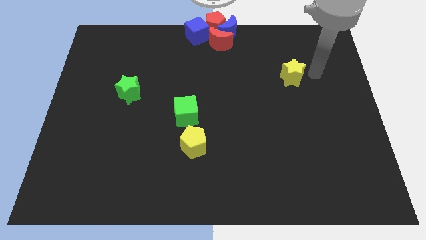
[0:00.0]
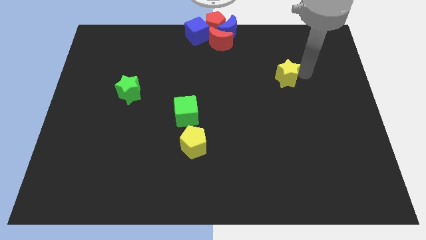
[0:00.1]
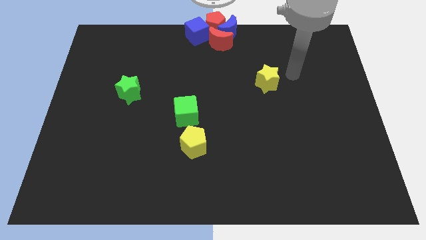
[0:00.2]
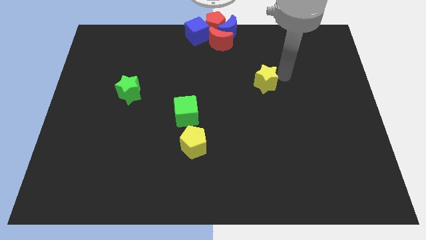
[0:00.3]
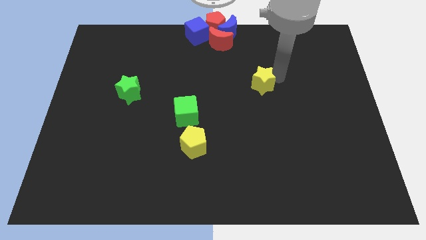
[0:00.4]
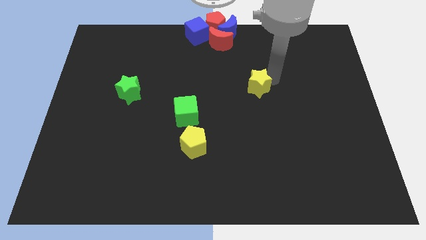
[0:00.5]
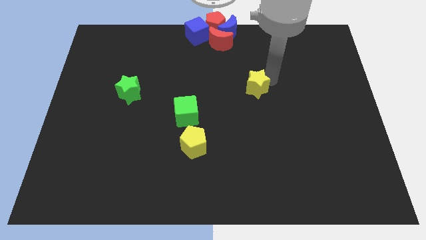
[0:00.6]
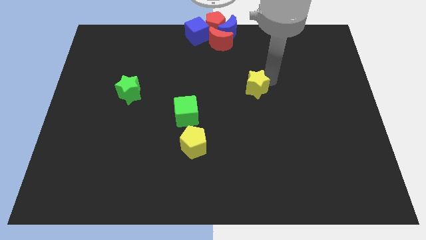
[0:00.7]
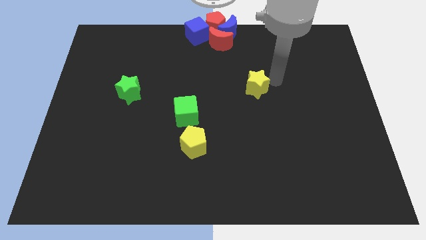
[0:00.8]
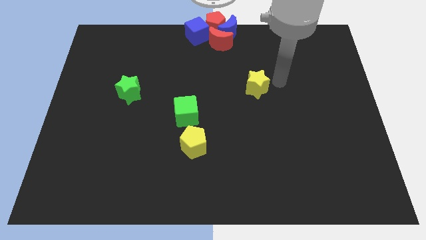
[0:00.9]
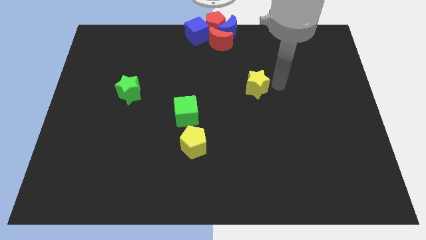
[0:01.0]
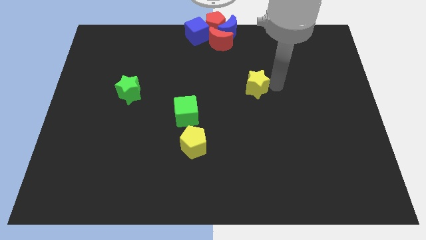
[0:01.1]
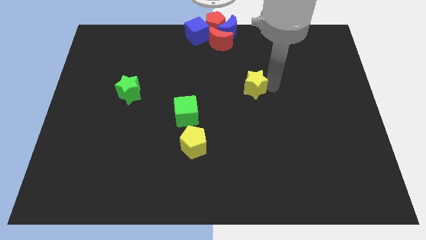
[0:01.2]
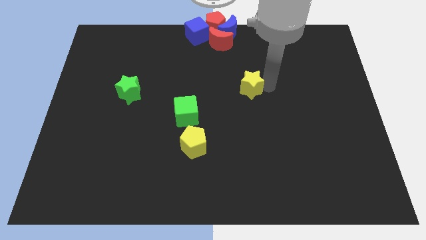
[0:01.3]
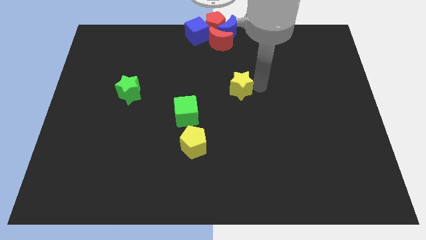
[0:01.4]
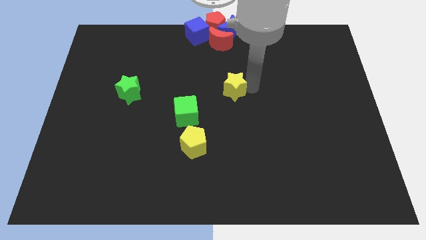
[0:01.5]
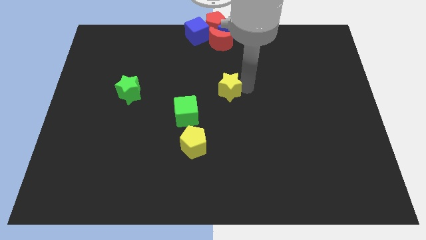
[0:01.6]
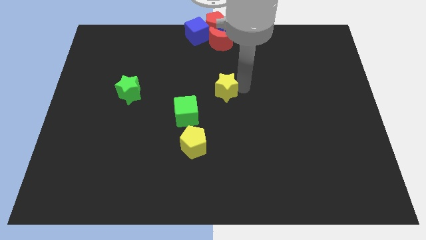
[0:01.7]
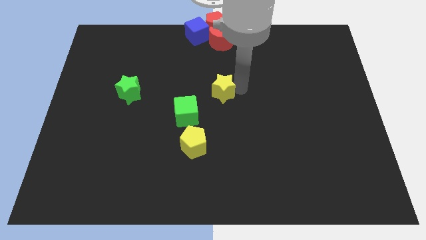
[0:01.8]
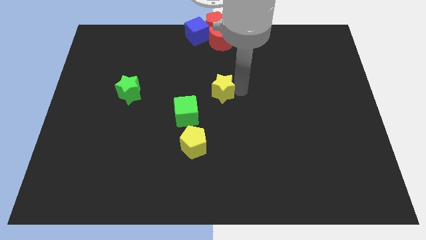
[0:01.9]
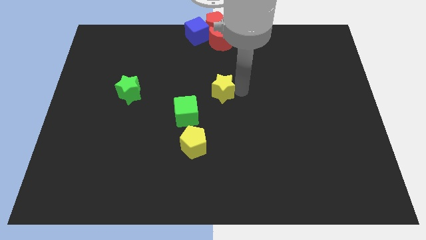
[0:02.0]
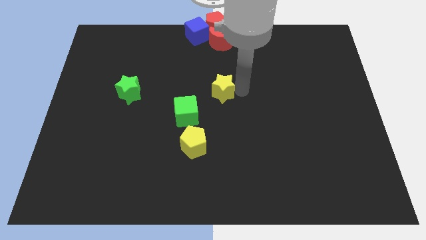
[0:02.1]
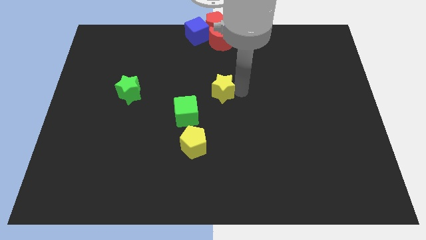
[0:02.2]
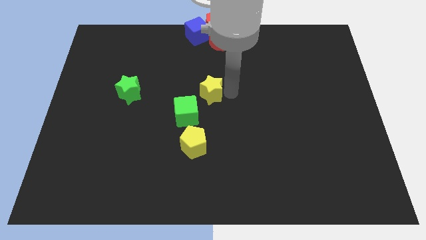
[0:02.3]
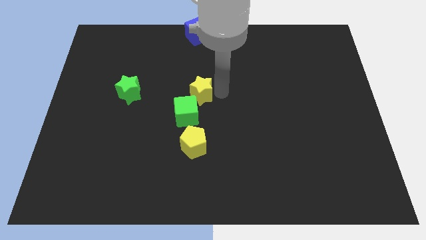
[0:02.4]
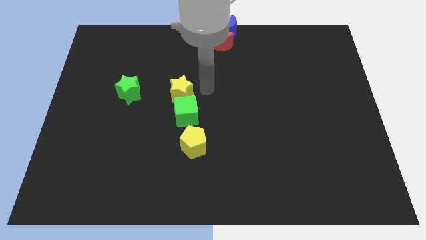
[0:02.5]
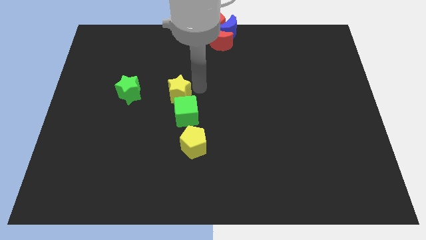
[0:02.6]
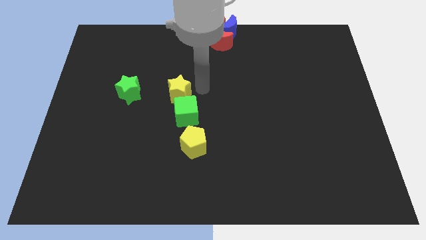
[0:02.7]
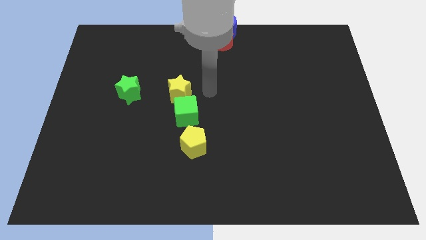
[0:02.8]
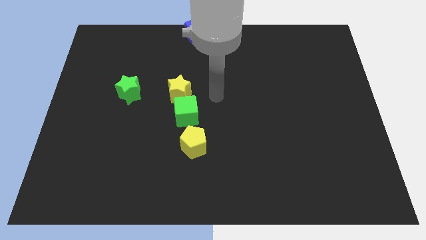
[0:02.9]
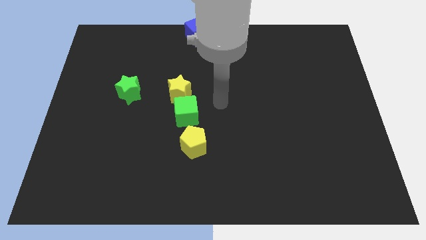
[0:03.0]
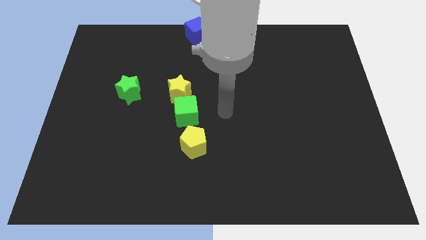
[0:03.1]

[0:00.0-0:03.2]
push the yellow star above the green cube

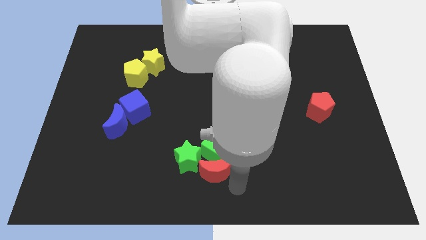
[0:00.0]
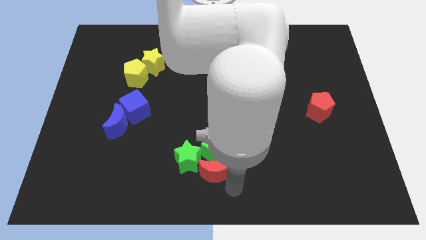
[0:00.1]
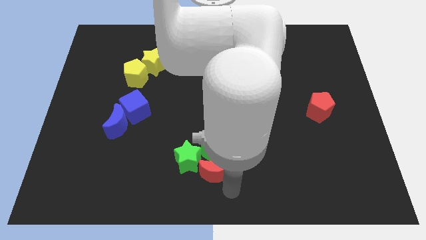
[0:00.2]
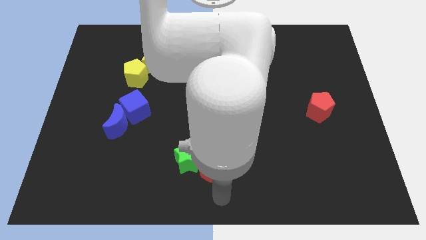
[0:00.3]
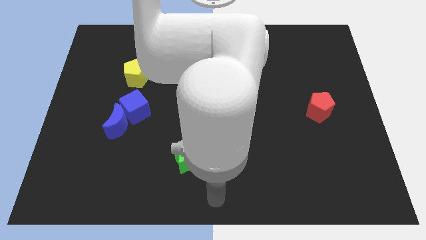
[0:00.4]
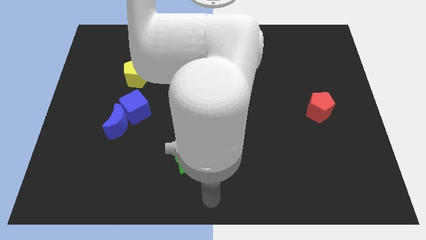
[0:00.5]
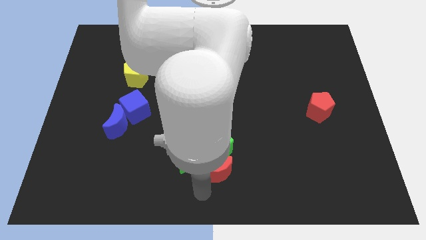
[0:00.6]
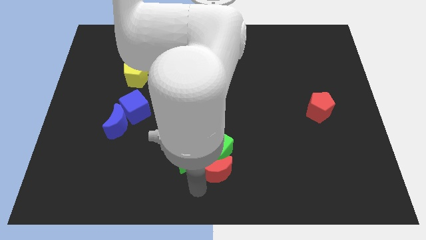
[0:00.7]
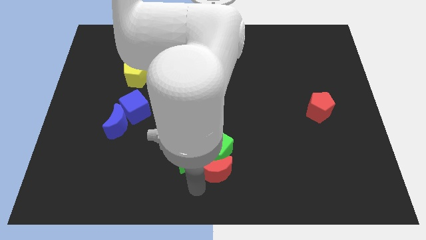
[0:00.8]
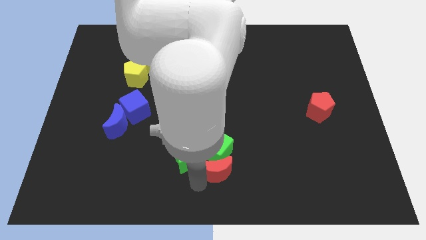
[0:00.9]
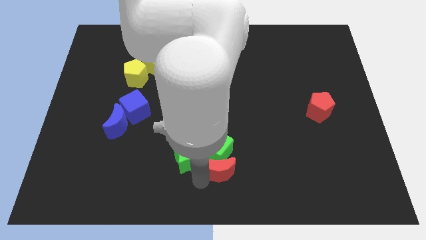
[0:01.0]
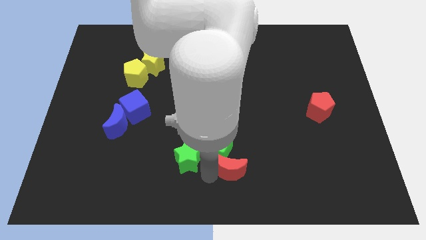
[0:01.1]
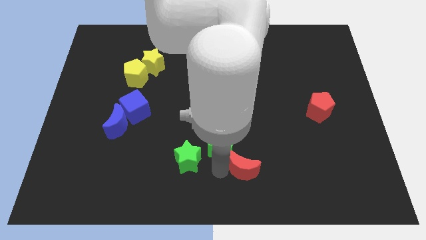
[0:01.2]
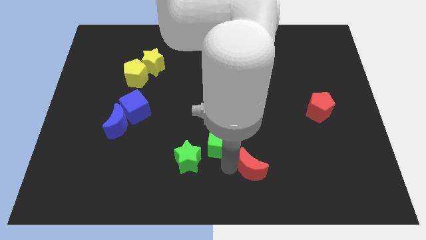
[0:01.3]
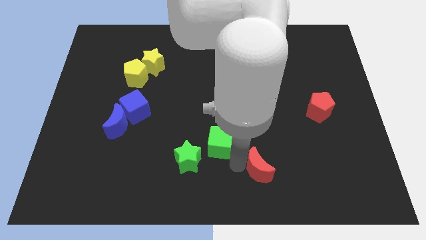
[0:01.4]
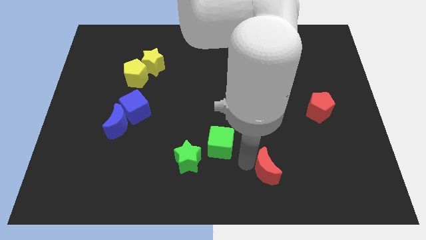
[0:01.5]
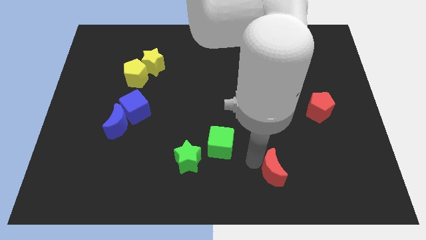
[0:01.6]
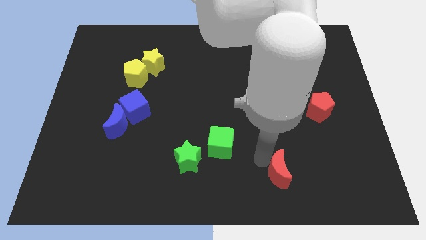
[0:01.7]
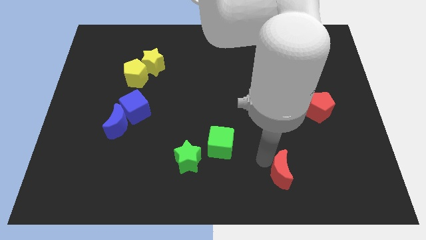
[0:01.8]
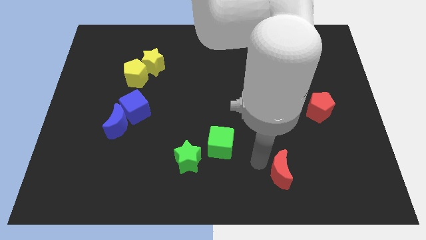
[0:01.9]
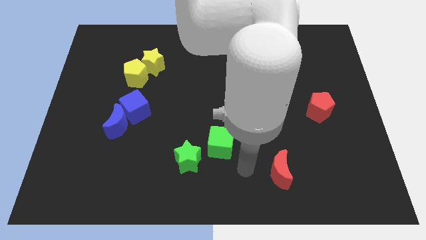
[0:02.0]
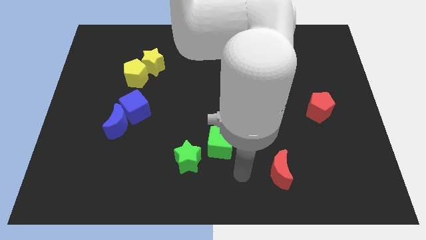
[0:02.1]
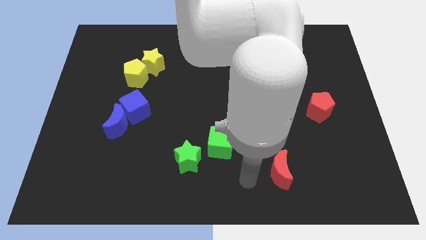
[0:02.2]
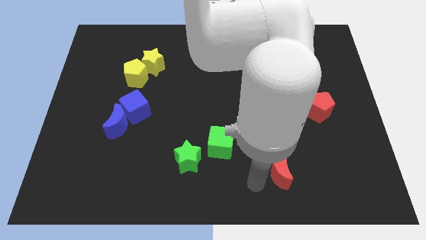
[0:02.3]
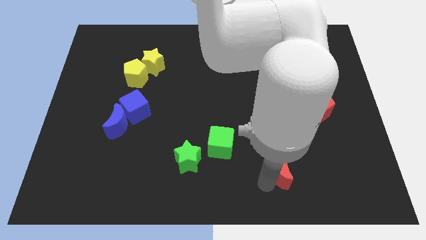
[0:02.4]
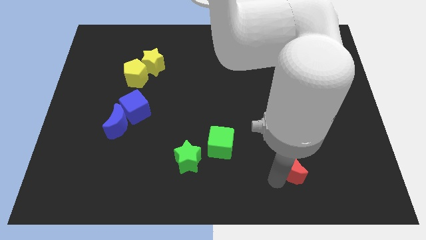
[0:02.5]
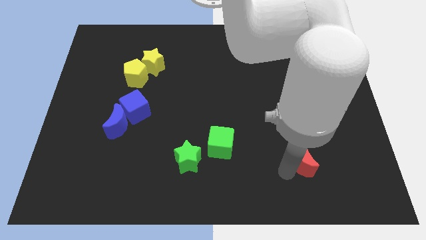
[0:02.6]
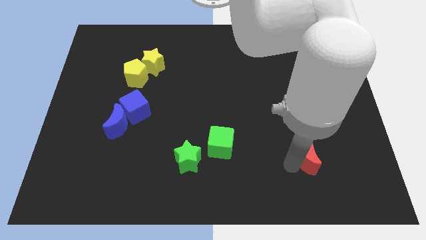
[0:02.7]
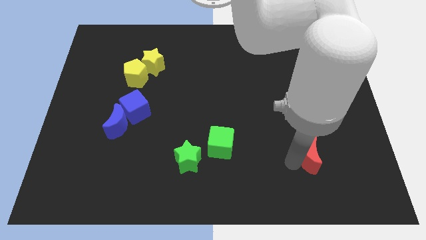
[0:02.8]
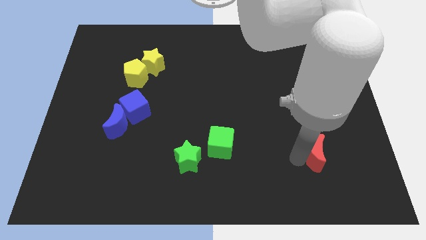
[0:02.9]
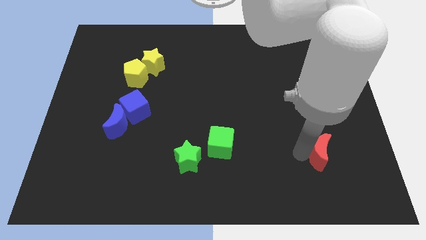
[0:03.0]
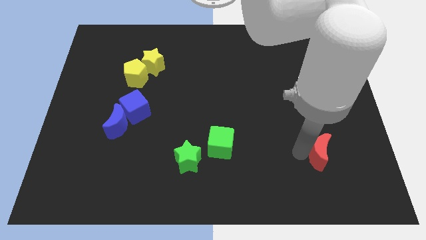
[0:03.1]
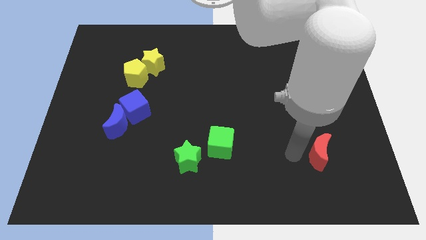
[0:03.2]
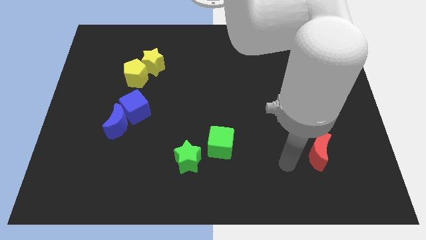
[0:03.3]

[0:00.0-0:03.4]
move the red moon below to the red pentagon

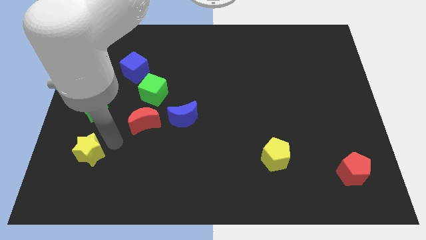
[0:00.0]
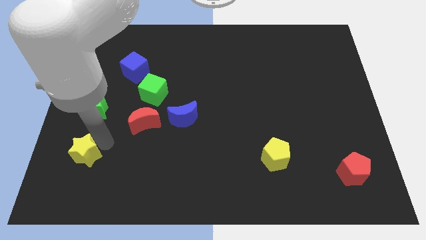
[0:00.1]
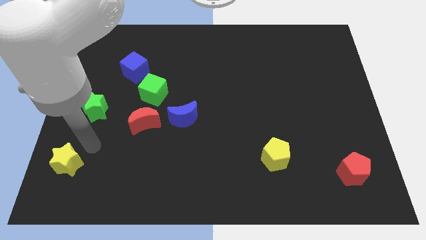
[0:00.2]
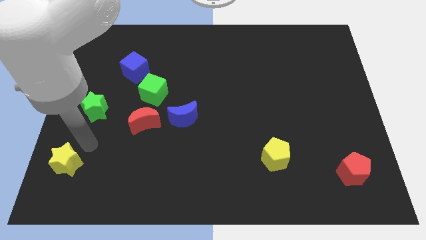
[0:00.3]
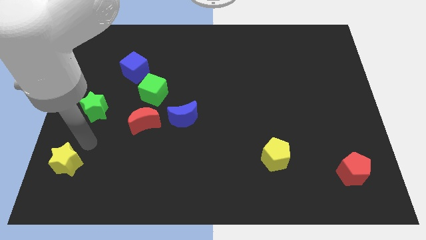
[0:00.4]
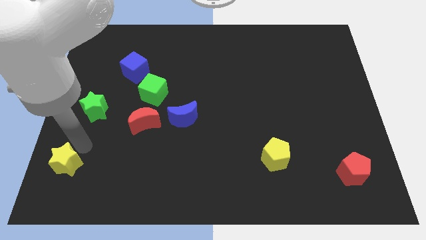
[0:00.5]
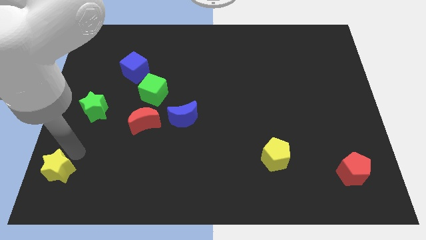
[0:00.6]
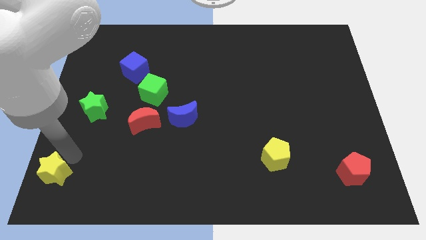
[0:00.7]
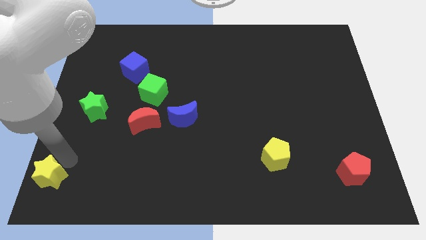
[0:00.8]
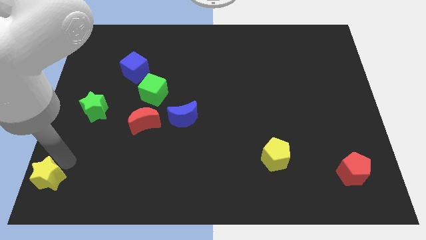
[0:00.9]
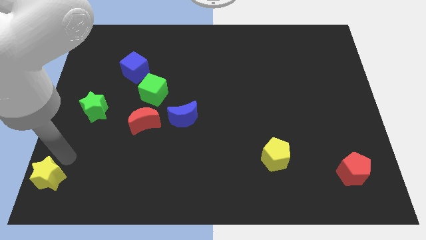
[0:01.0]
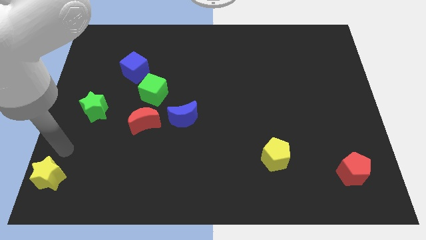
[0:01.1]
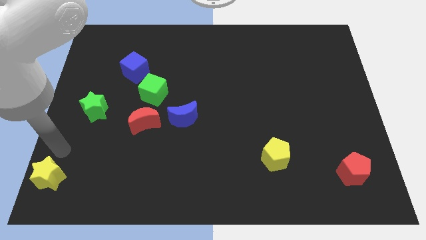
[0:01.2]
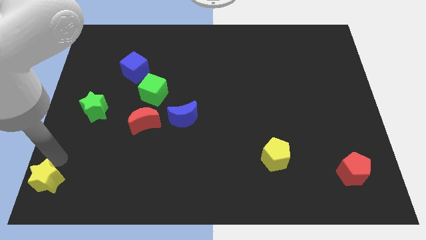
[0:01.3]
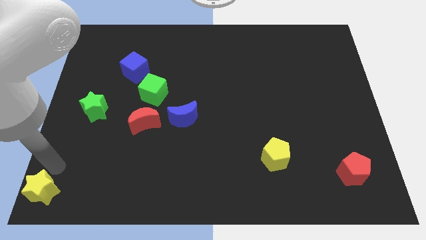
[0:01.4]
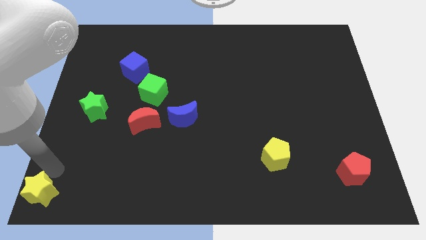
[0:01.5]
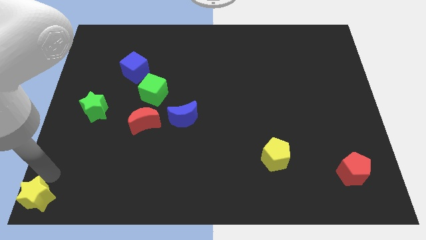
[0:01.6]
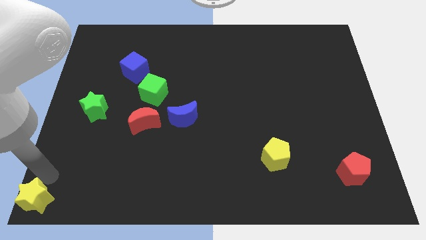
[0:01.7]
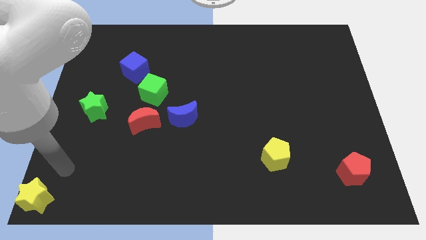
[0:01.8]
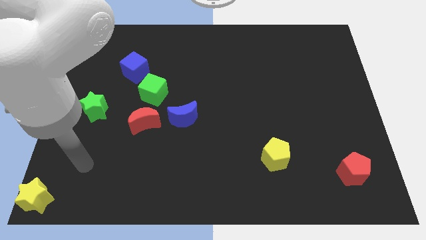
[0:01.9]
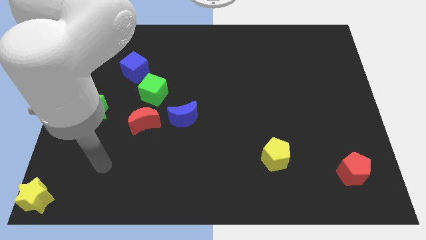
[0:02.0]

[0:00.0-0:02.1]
push the yellow star to the bottom left corner of the board

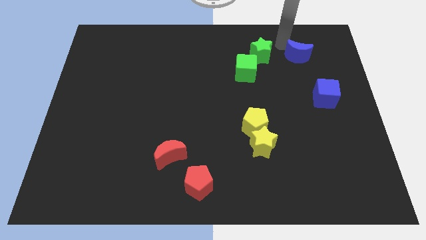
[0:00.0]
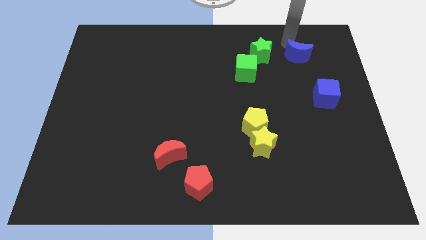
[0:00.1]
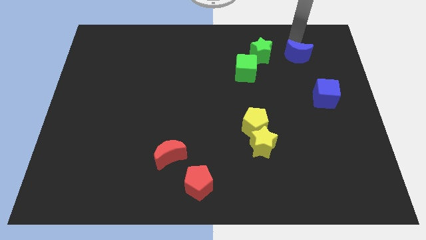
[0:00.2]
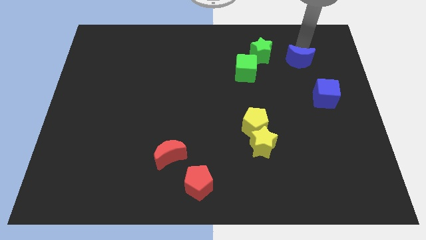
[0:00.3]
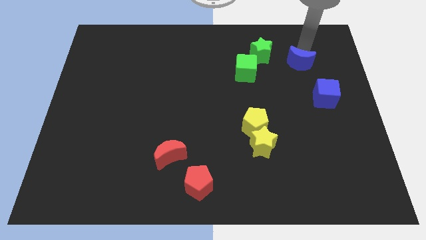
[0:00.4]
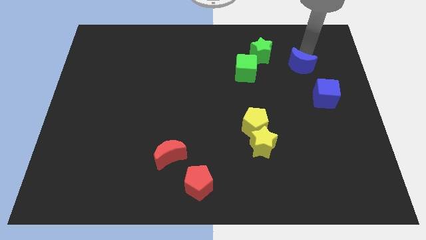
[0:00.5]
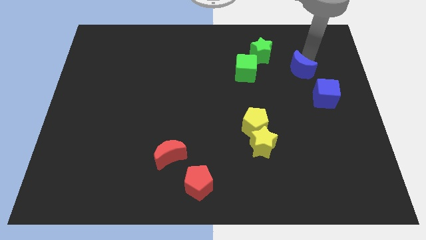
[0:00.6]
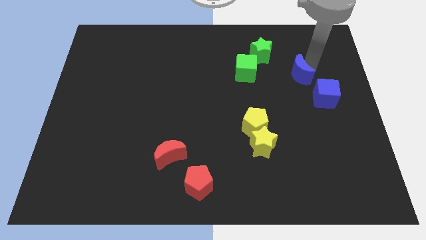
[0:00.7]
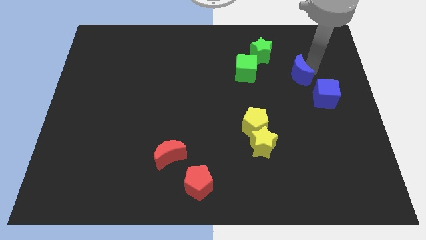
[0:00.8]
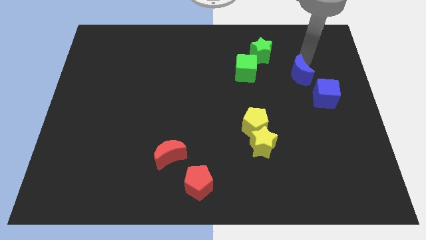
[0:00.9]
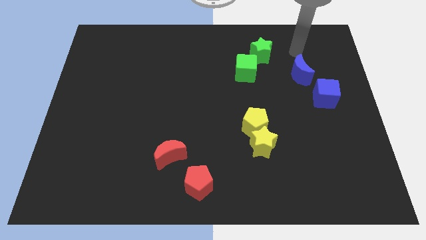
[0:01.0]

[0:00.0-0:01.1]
move blue moon towards blue cube
